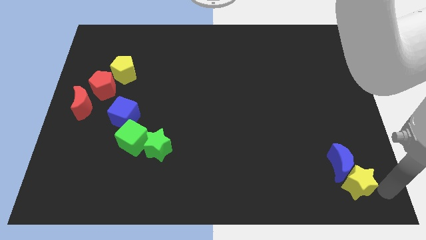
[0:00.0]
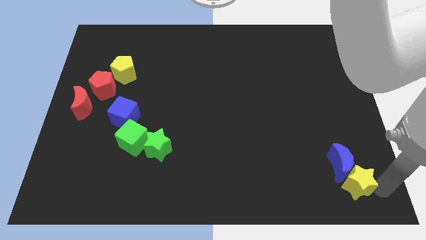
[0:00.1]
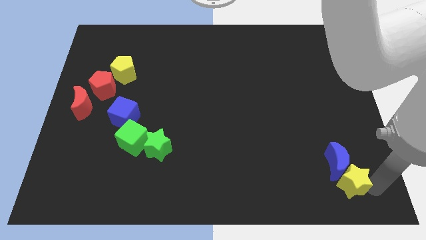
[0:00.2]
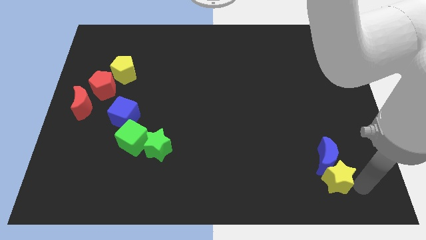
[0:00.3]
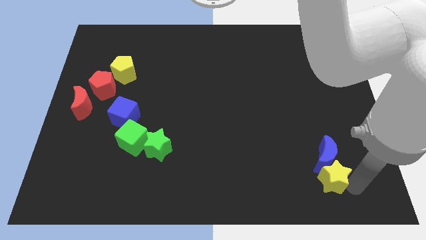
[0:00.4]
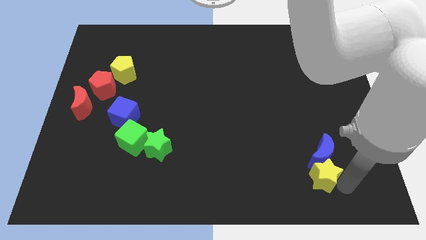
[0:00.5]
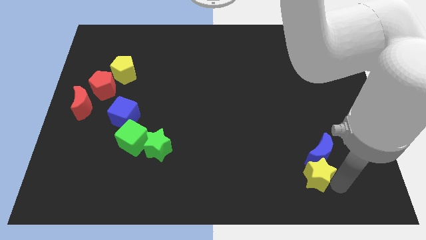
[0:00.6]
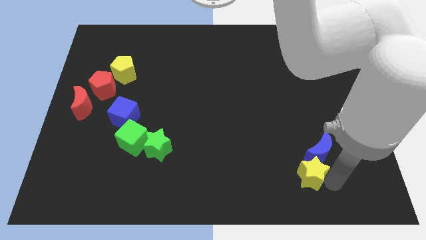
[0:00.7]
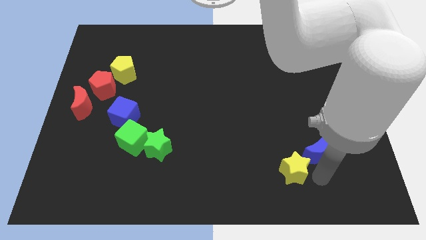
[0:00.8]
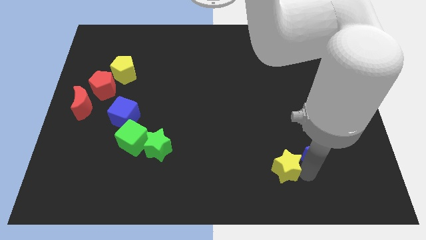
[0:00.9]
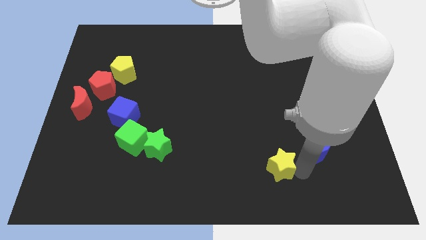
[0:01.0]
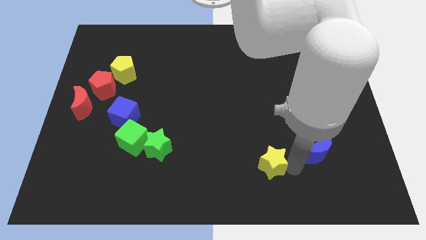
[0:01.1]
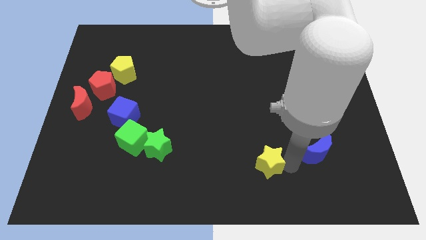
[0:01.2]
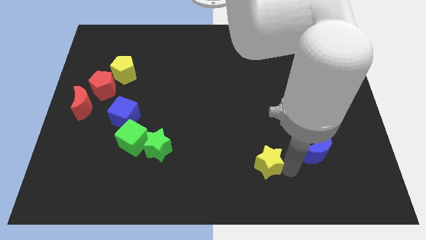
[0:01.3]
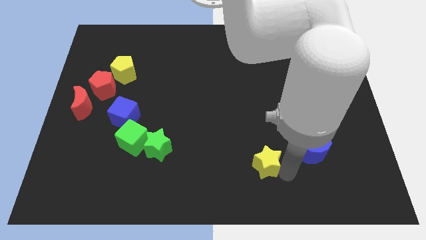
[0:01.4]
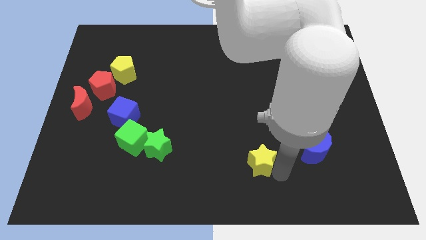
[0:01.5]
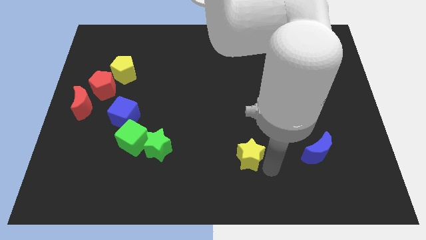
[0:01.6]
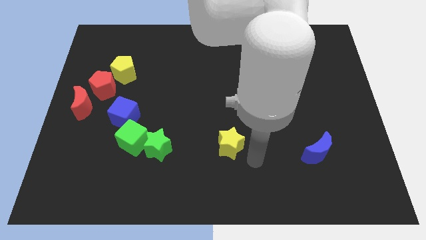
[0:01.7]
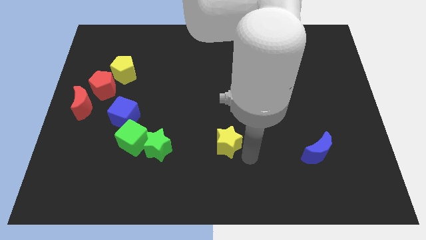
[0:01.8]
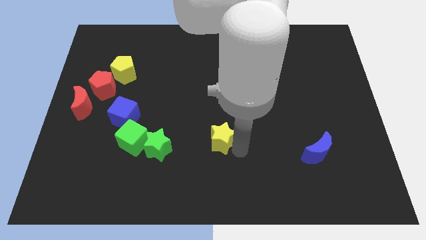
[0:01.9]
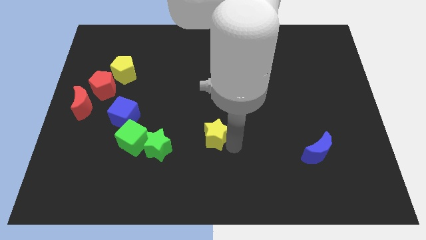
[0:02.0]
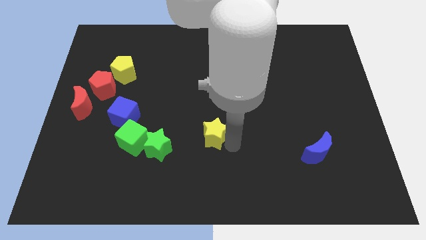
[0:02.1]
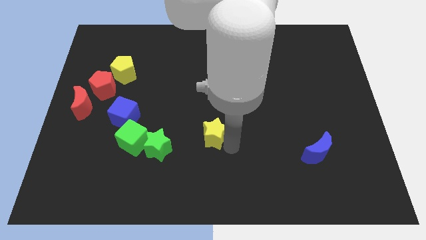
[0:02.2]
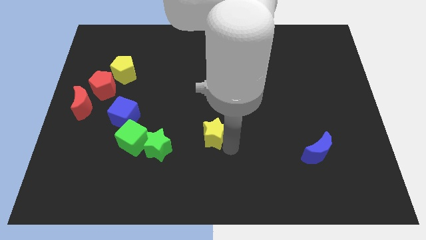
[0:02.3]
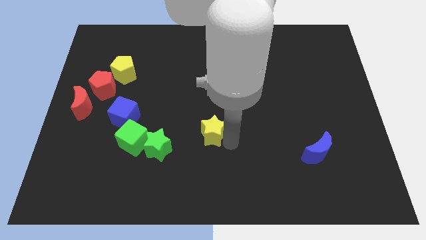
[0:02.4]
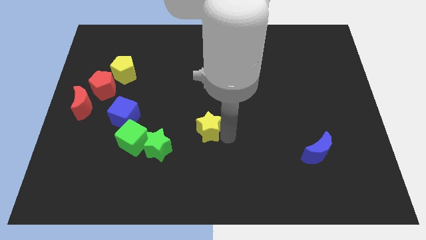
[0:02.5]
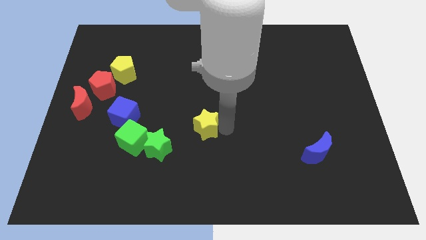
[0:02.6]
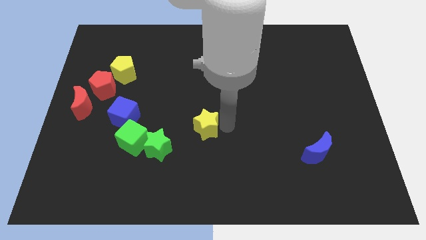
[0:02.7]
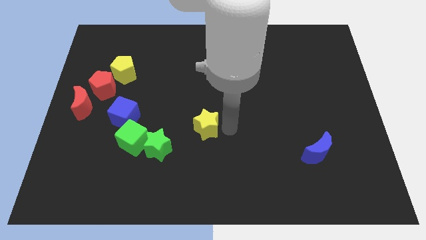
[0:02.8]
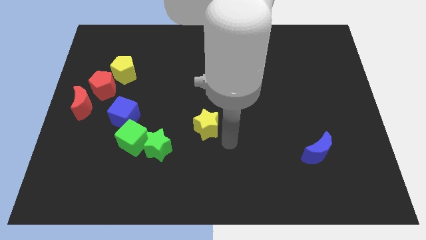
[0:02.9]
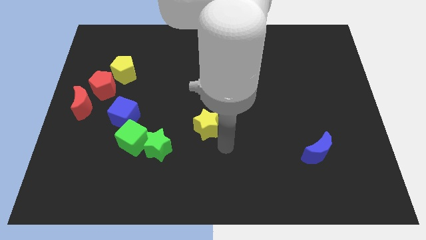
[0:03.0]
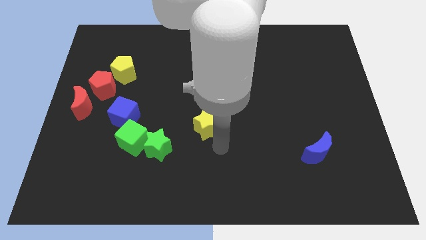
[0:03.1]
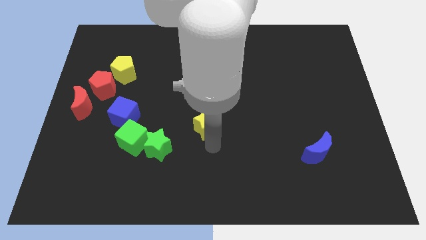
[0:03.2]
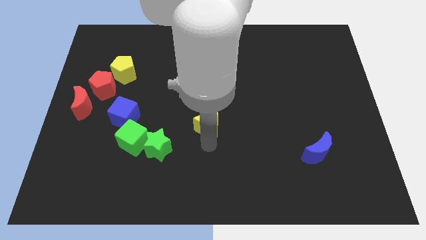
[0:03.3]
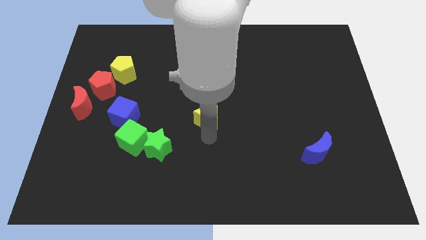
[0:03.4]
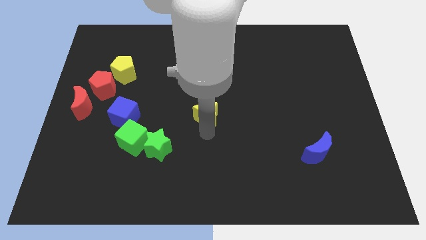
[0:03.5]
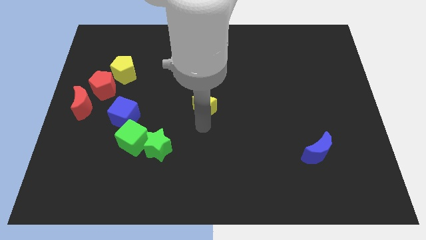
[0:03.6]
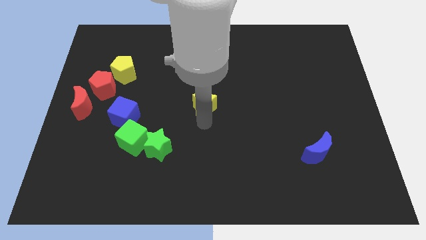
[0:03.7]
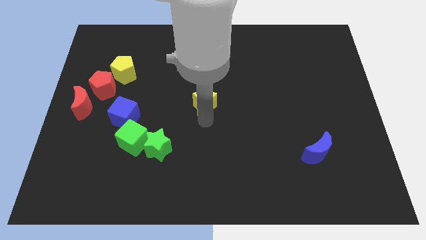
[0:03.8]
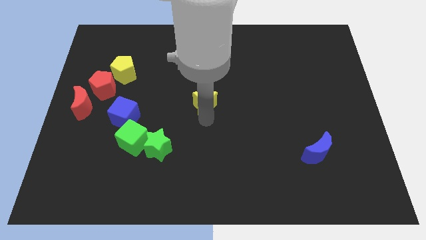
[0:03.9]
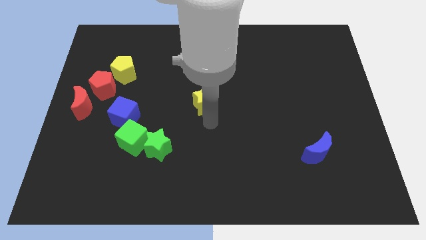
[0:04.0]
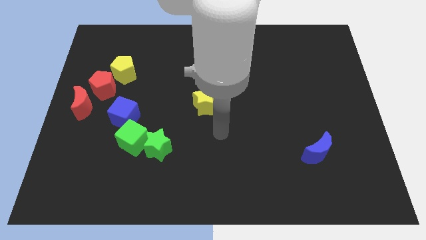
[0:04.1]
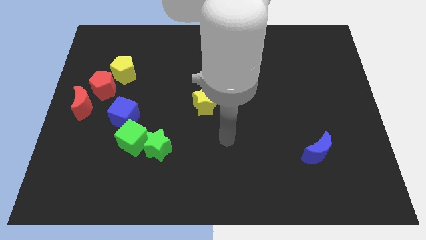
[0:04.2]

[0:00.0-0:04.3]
push the yellow star to the center of the board

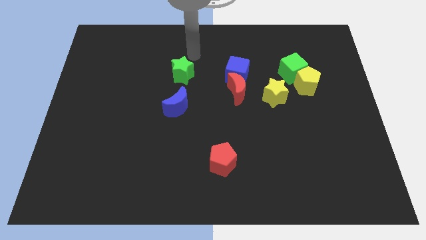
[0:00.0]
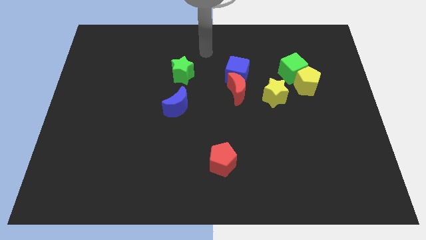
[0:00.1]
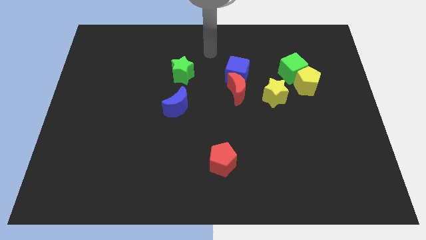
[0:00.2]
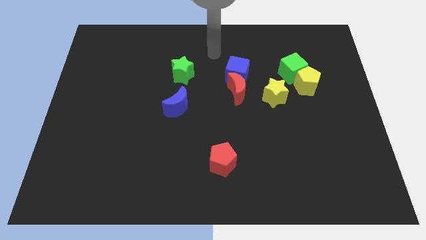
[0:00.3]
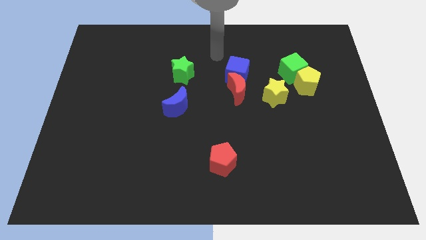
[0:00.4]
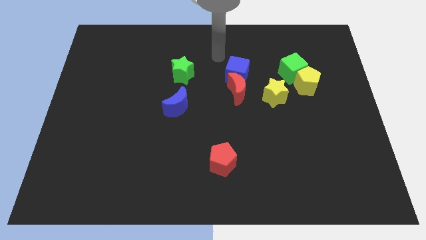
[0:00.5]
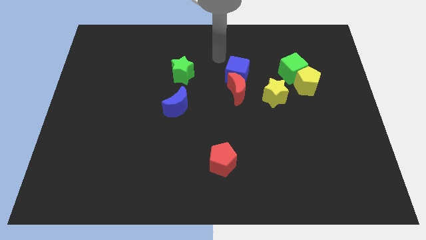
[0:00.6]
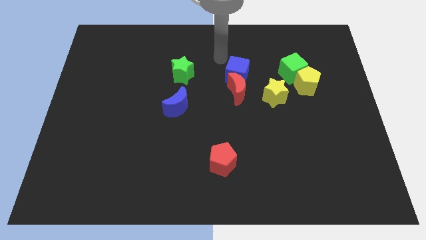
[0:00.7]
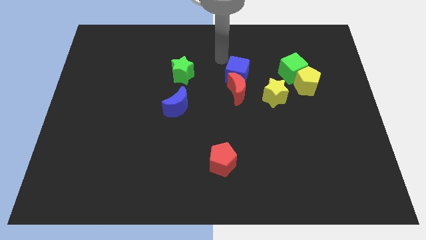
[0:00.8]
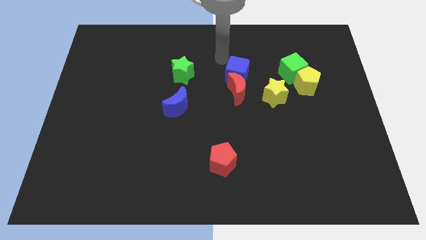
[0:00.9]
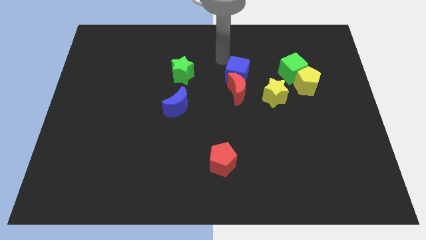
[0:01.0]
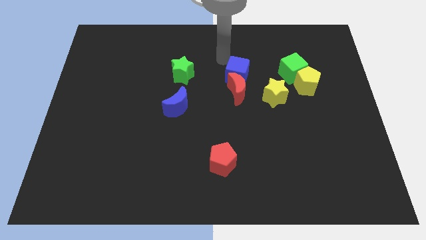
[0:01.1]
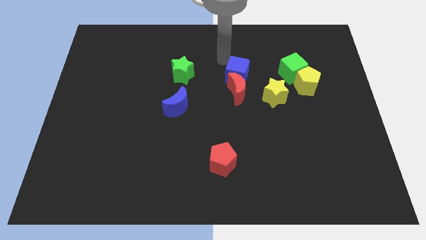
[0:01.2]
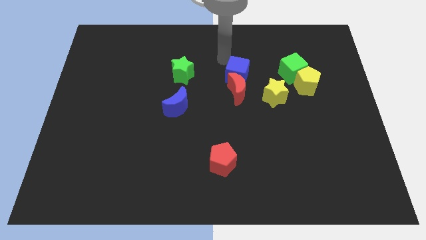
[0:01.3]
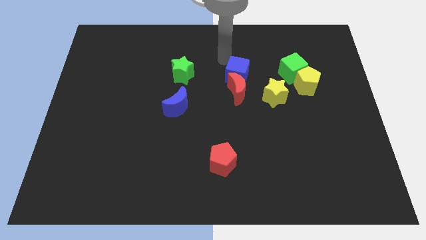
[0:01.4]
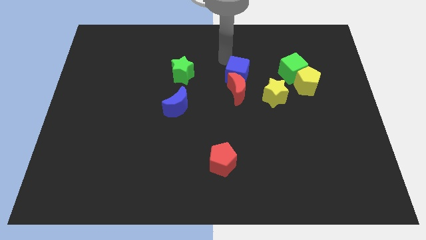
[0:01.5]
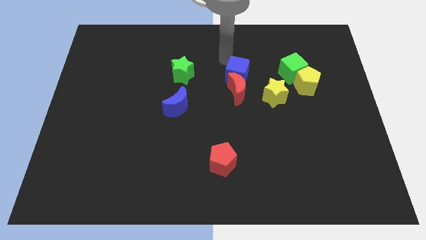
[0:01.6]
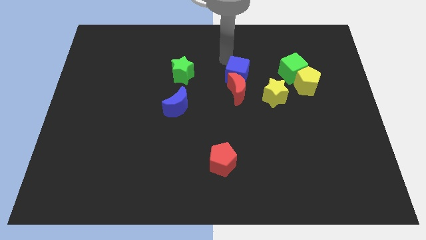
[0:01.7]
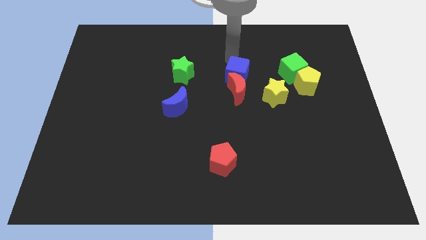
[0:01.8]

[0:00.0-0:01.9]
point your hand at the top left side of the blue cube

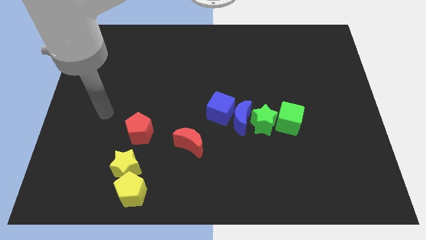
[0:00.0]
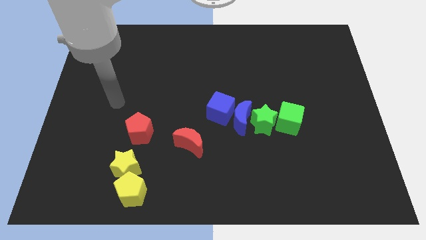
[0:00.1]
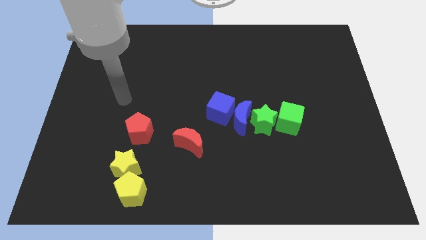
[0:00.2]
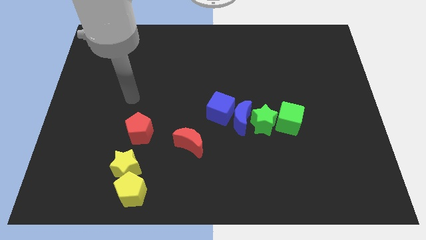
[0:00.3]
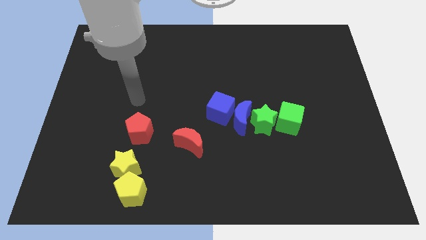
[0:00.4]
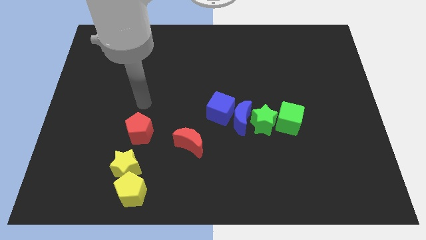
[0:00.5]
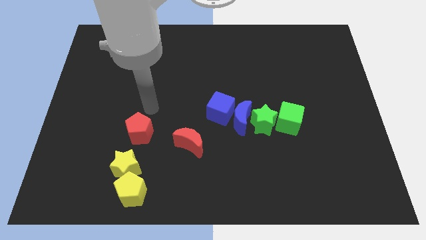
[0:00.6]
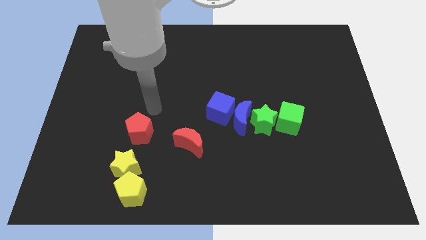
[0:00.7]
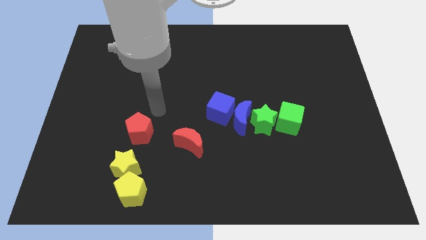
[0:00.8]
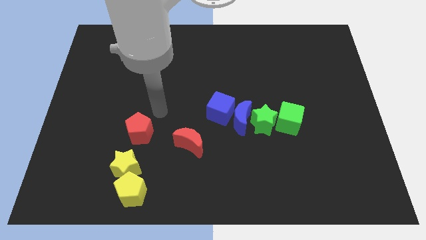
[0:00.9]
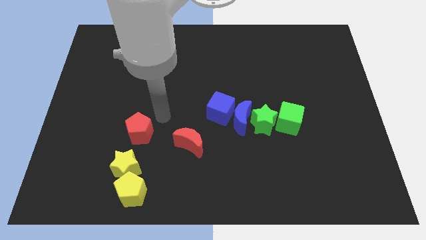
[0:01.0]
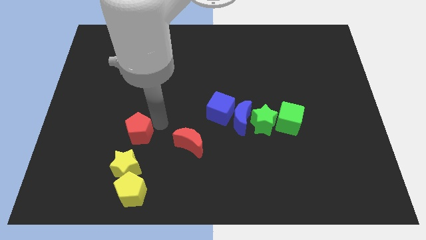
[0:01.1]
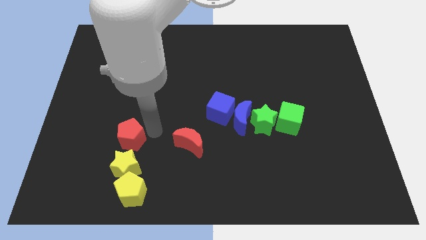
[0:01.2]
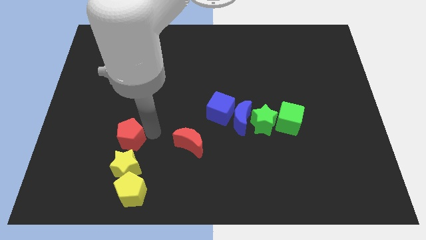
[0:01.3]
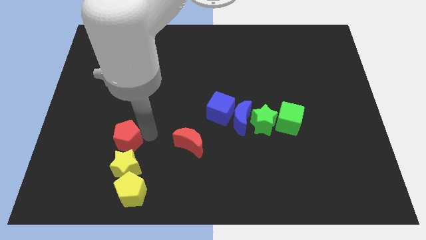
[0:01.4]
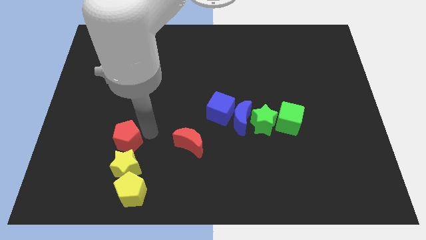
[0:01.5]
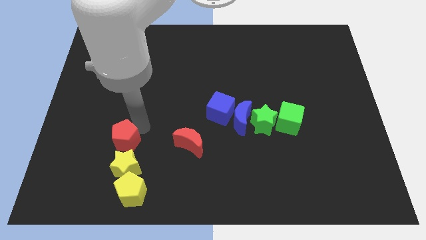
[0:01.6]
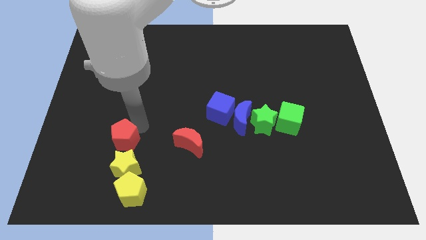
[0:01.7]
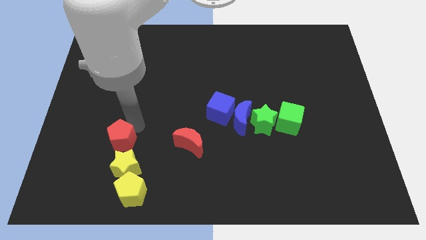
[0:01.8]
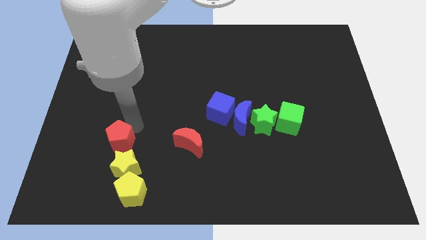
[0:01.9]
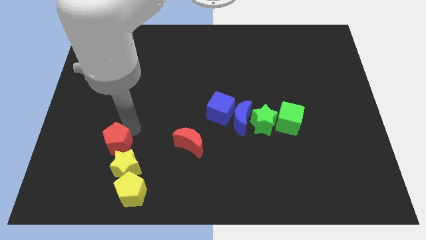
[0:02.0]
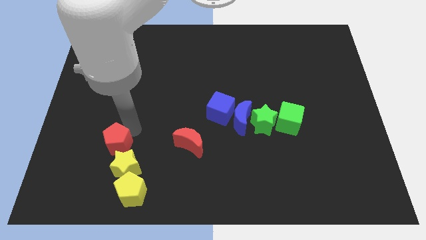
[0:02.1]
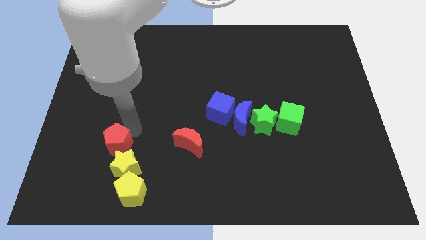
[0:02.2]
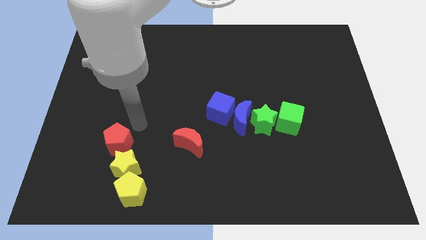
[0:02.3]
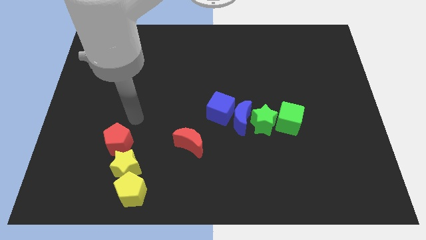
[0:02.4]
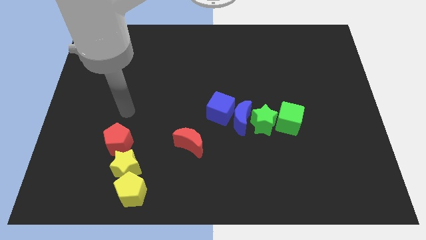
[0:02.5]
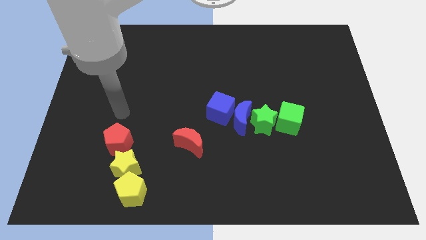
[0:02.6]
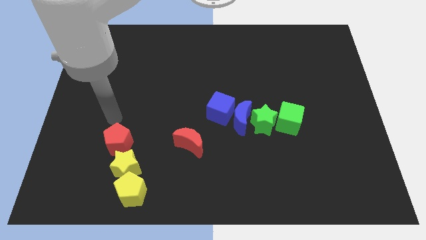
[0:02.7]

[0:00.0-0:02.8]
move the red pentagon above the yellow star
